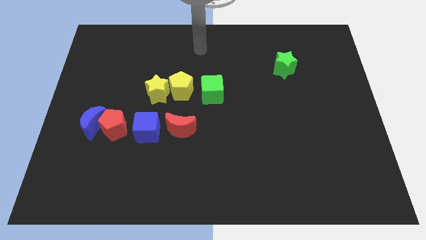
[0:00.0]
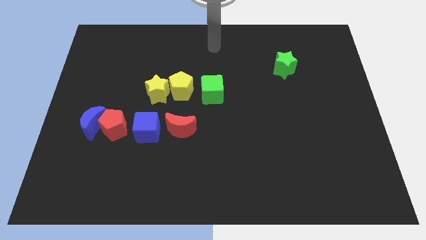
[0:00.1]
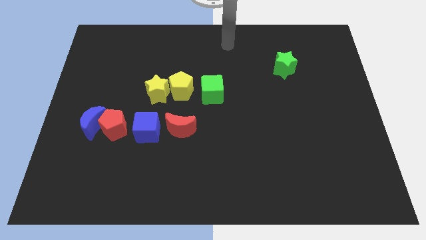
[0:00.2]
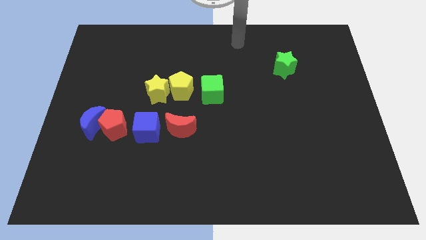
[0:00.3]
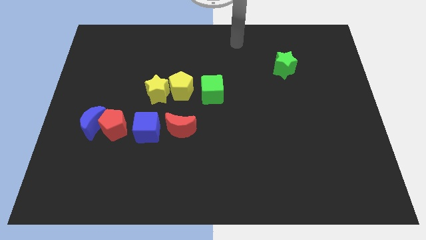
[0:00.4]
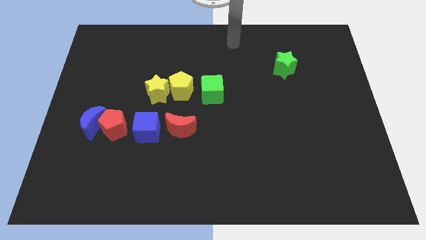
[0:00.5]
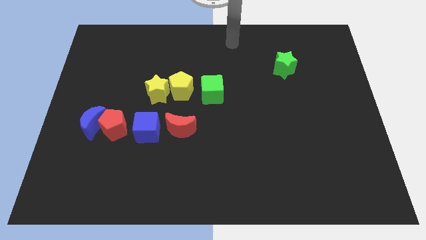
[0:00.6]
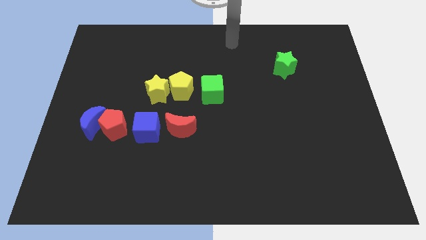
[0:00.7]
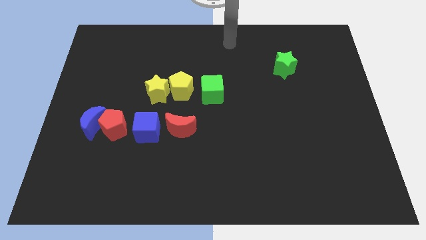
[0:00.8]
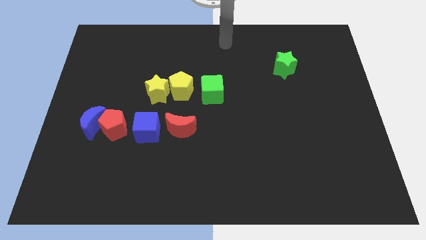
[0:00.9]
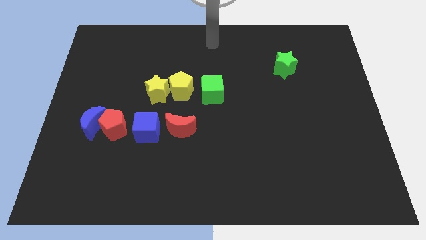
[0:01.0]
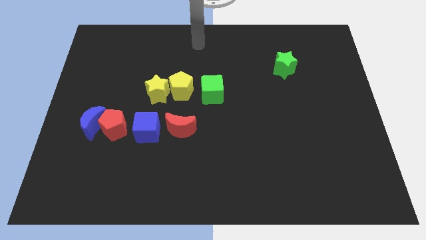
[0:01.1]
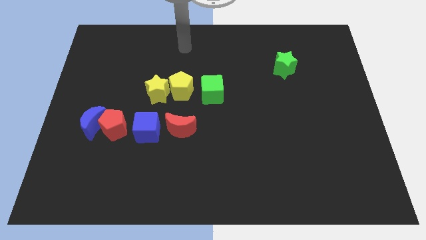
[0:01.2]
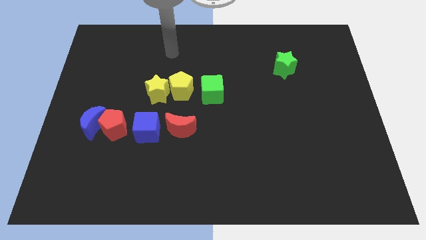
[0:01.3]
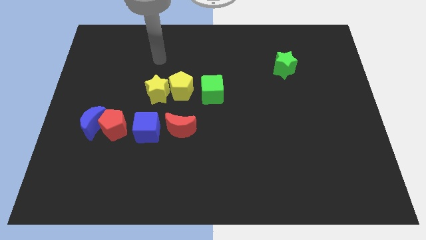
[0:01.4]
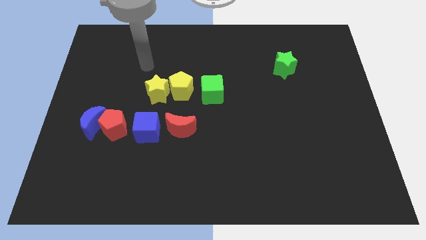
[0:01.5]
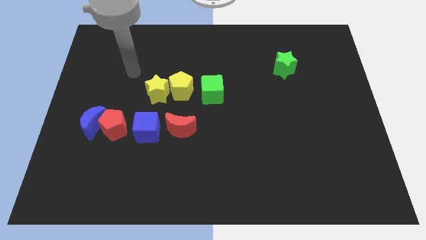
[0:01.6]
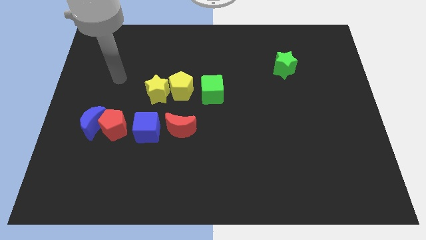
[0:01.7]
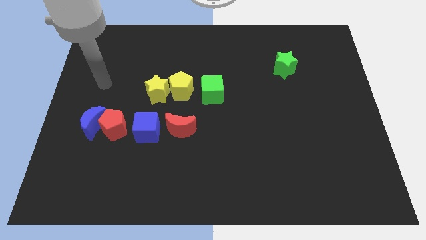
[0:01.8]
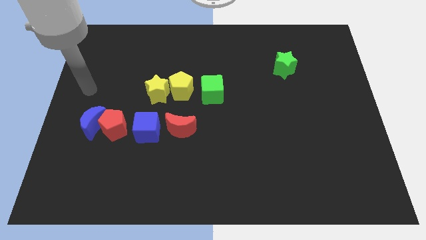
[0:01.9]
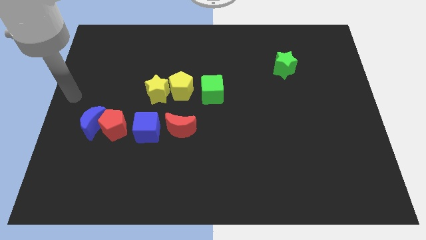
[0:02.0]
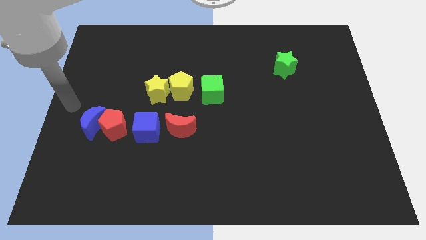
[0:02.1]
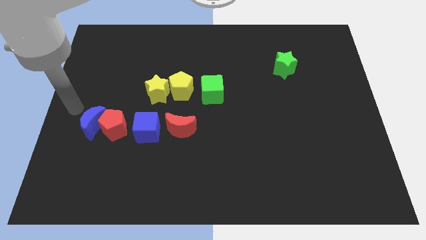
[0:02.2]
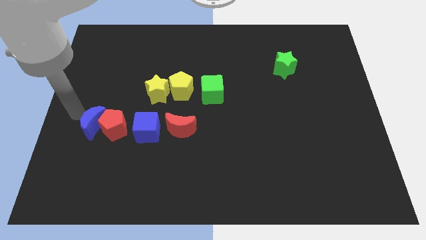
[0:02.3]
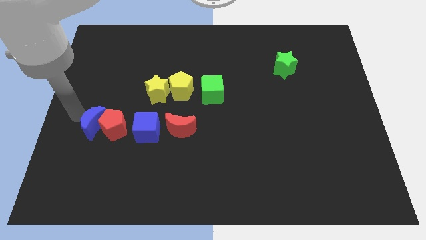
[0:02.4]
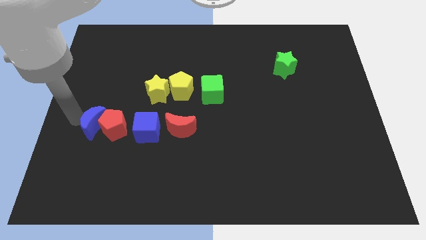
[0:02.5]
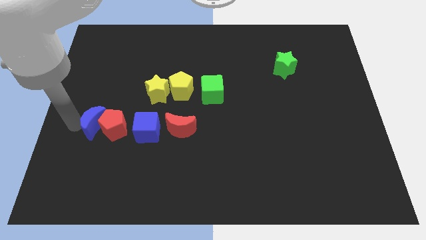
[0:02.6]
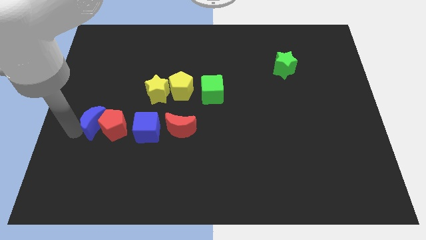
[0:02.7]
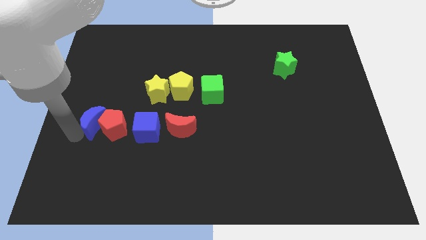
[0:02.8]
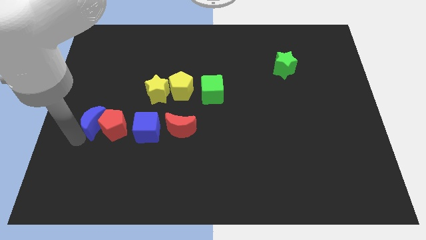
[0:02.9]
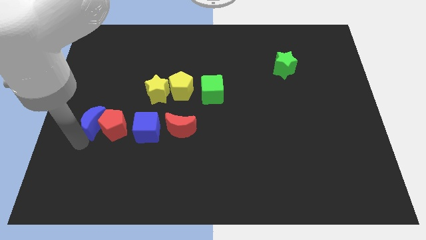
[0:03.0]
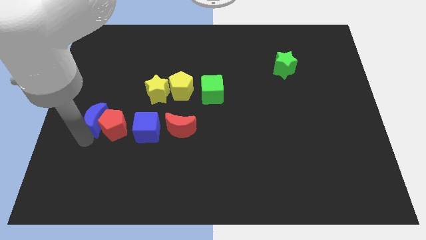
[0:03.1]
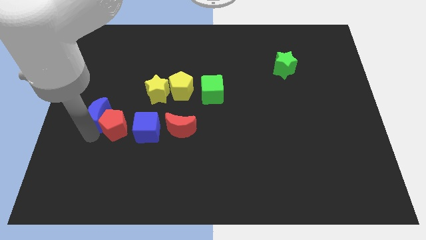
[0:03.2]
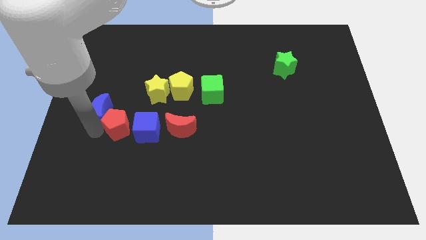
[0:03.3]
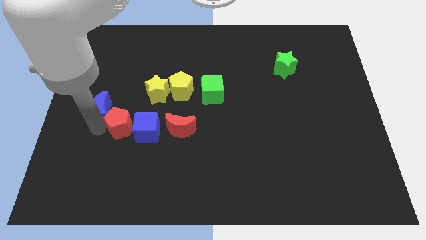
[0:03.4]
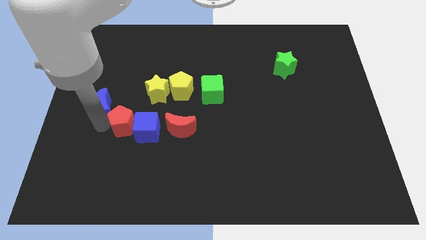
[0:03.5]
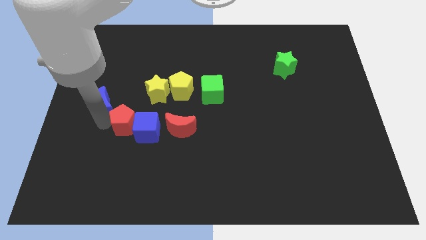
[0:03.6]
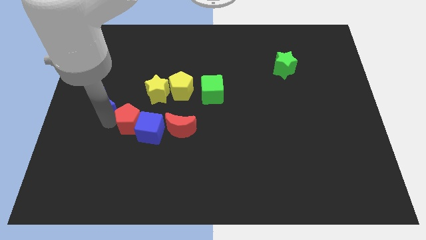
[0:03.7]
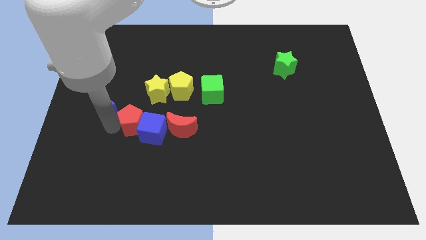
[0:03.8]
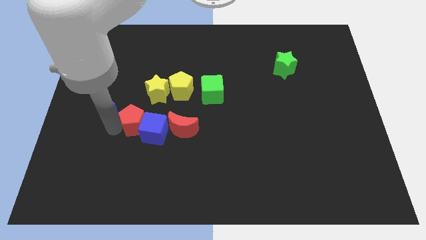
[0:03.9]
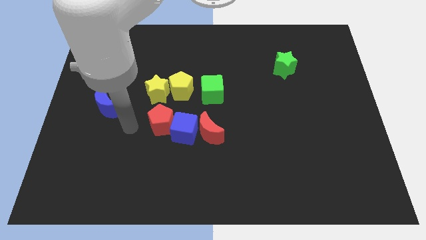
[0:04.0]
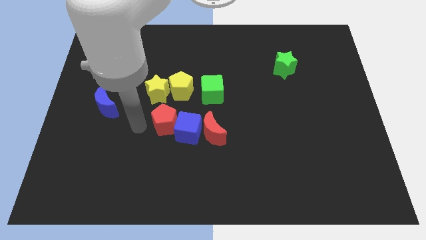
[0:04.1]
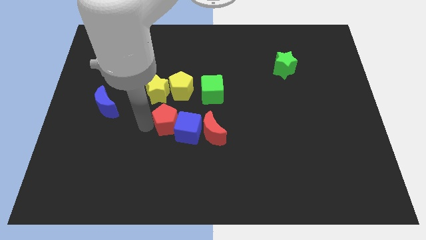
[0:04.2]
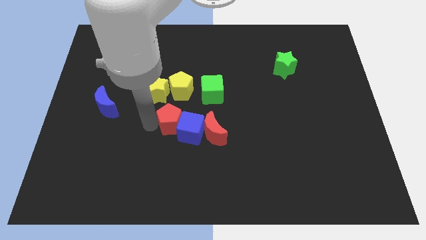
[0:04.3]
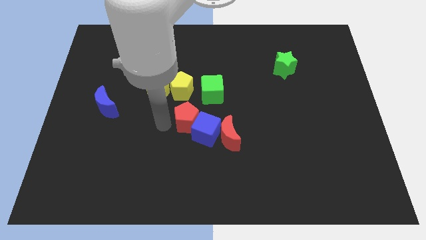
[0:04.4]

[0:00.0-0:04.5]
separate the blue moon and the red pentagon

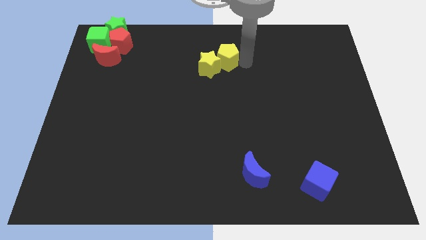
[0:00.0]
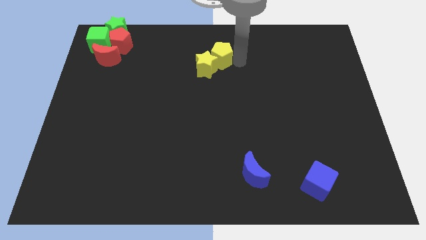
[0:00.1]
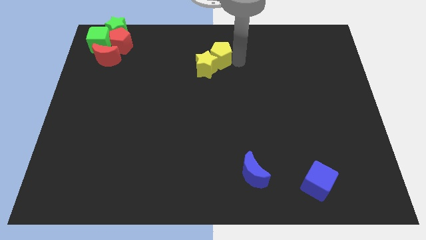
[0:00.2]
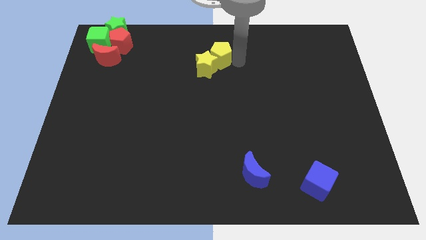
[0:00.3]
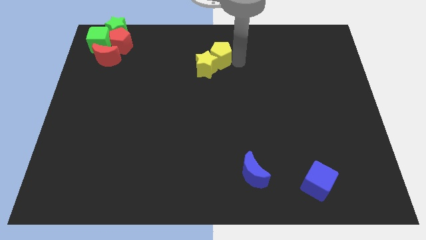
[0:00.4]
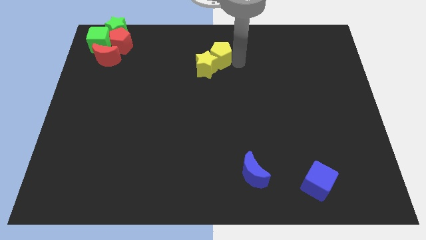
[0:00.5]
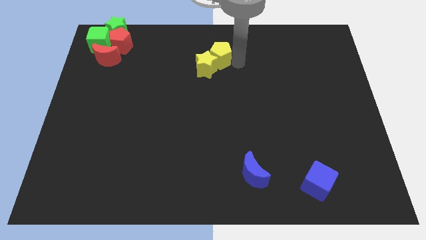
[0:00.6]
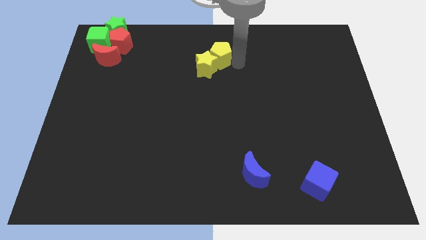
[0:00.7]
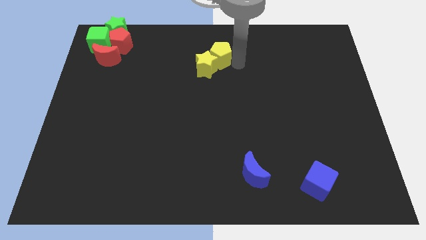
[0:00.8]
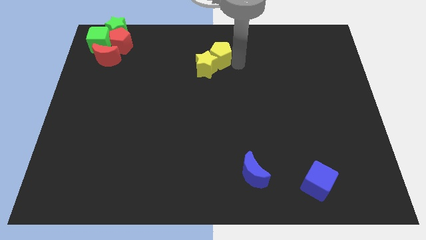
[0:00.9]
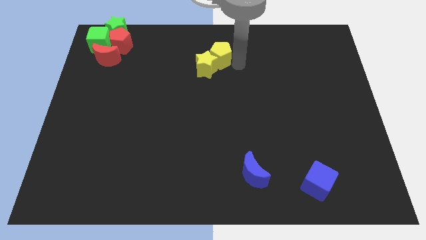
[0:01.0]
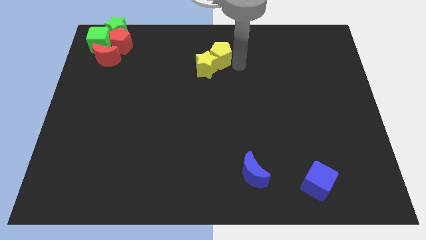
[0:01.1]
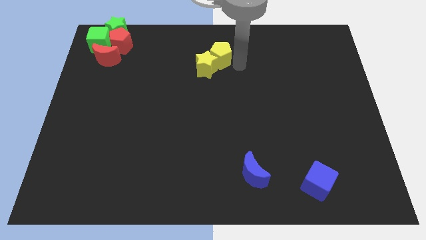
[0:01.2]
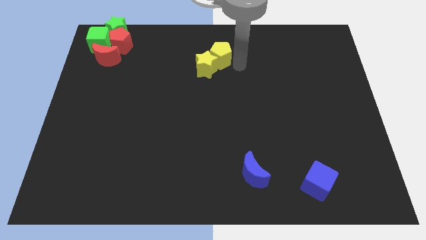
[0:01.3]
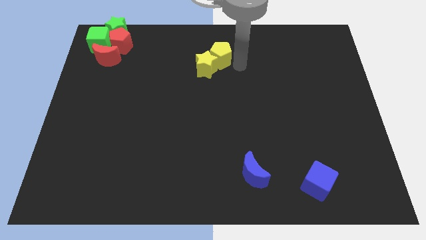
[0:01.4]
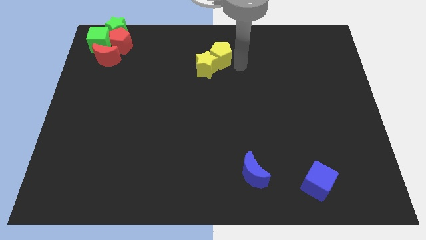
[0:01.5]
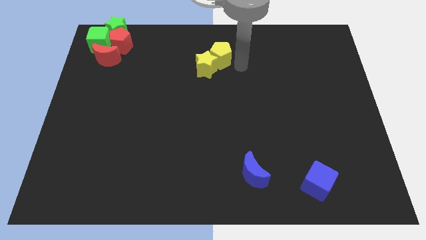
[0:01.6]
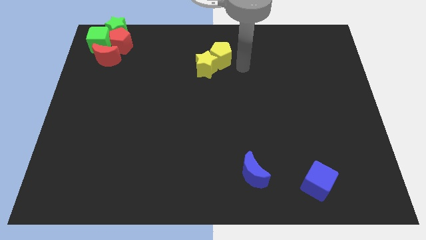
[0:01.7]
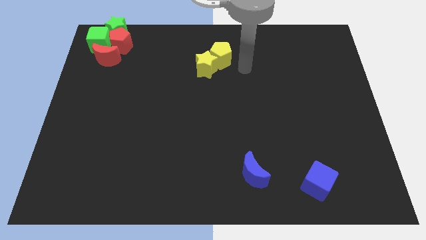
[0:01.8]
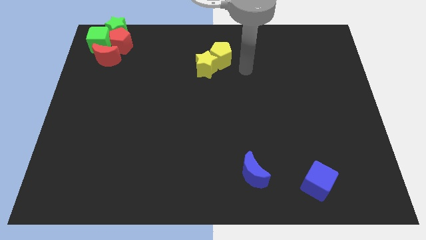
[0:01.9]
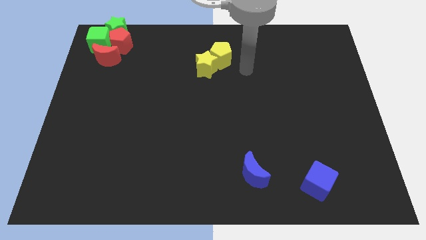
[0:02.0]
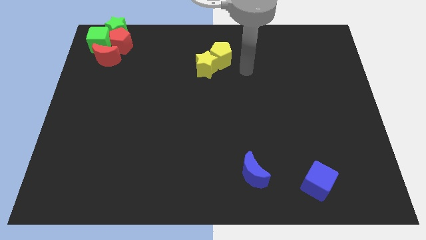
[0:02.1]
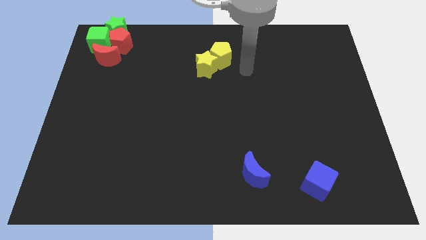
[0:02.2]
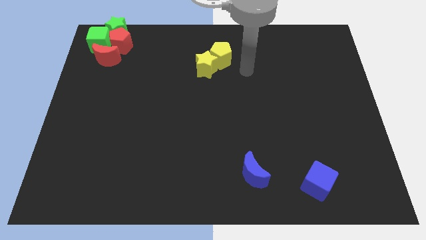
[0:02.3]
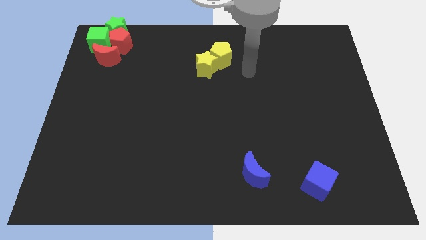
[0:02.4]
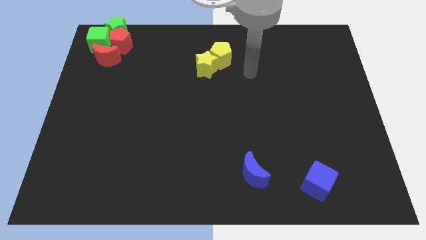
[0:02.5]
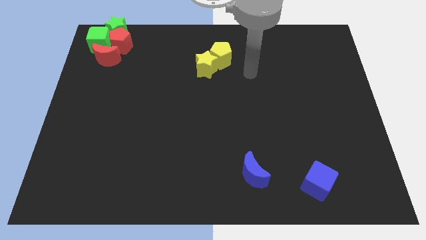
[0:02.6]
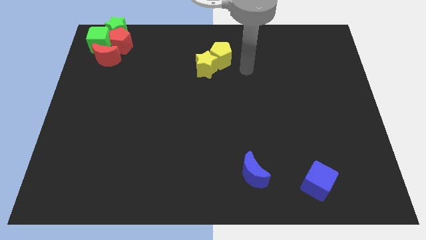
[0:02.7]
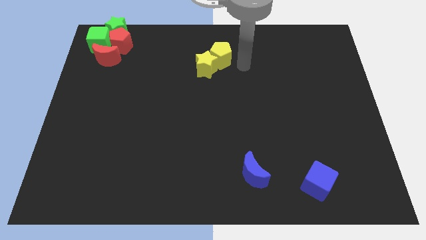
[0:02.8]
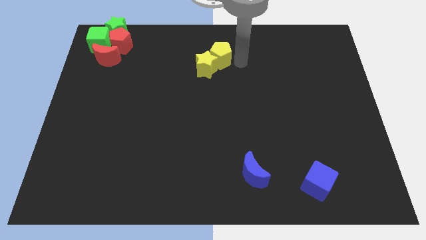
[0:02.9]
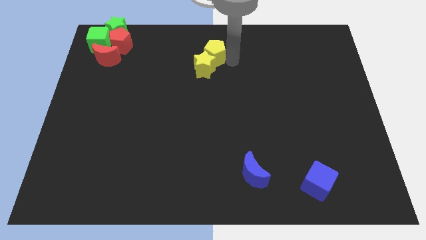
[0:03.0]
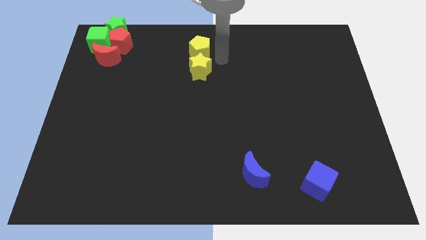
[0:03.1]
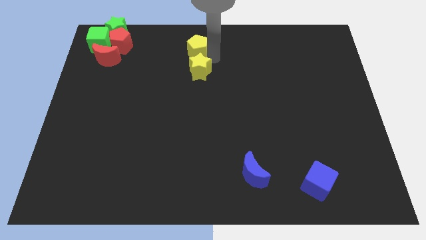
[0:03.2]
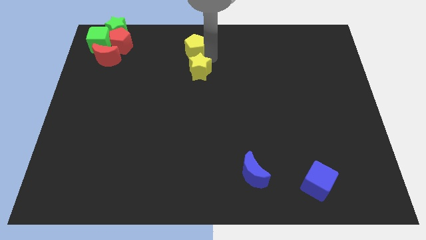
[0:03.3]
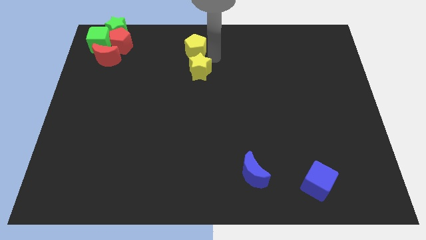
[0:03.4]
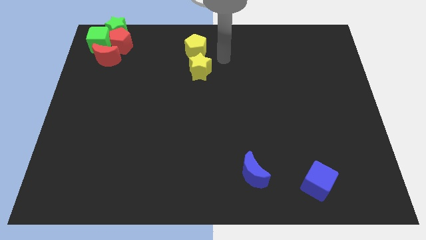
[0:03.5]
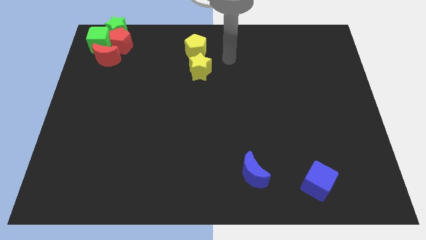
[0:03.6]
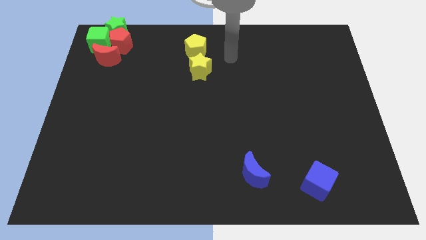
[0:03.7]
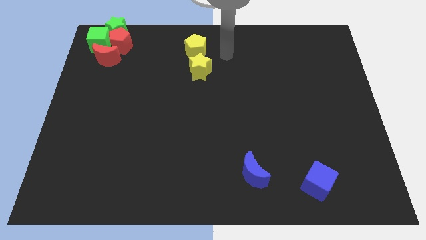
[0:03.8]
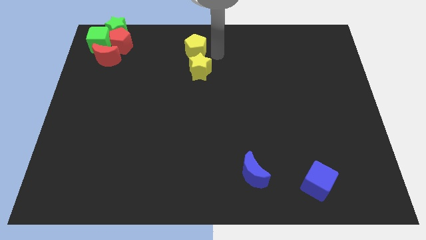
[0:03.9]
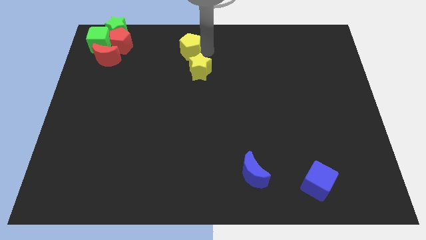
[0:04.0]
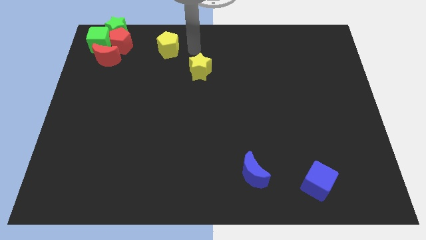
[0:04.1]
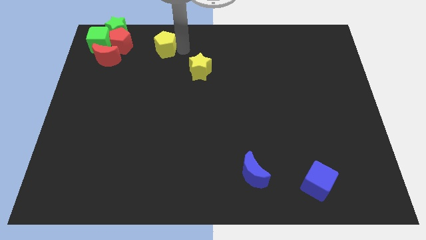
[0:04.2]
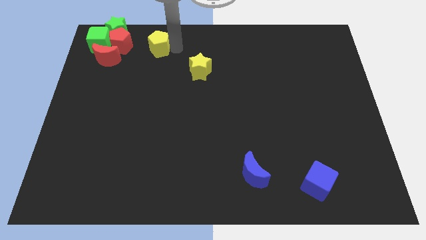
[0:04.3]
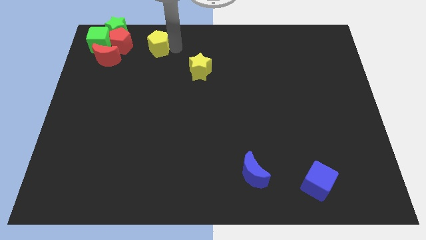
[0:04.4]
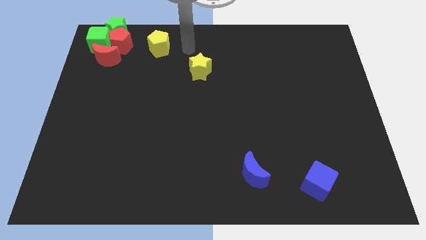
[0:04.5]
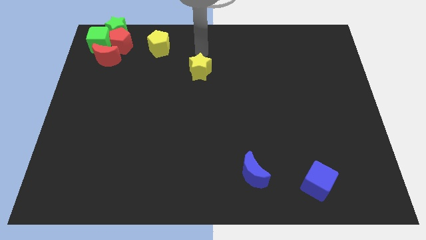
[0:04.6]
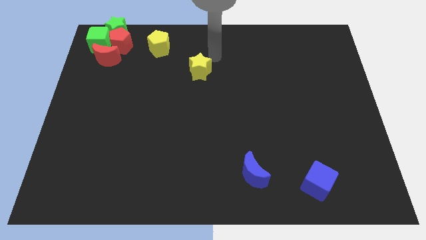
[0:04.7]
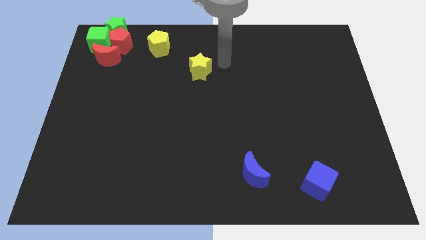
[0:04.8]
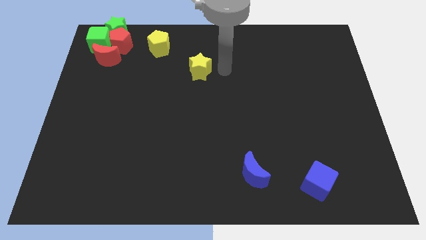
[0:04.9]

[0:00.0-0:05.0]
separate the yellow pentagon from the yellow star
